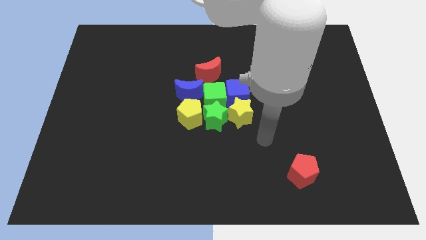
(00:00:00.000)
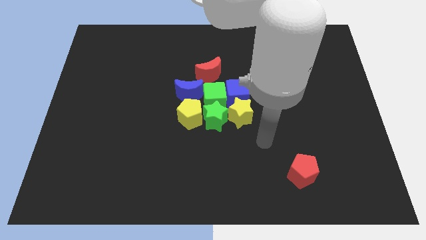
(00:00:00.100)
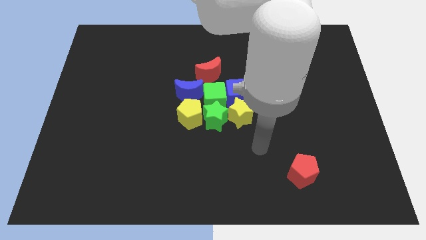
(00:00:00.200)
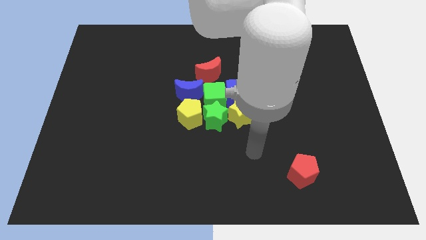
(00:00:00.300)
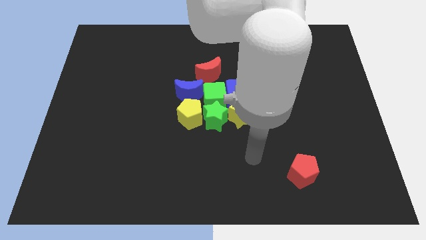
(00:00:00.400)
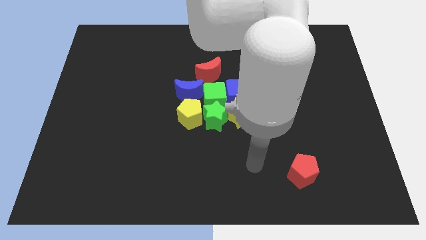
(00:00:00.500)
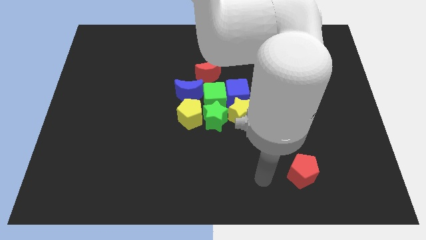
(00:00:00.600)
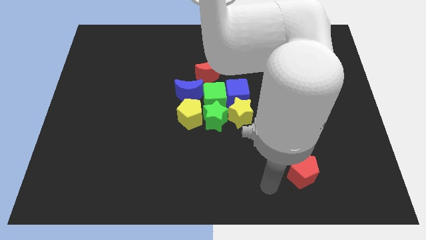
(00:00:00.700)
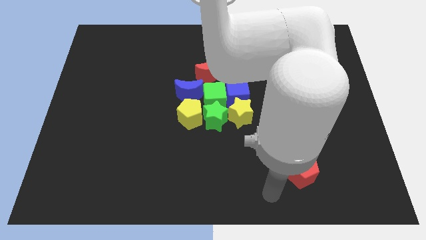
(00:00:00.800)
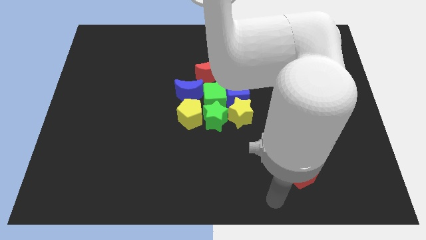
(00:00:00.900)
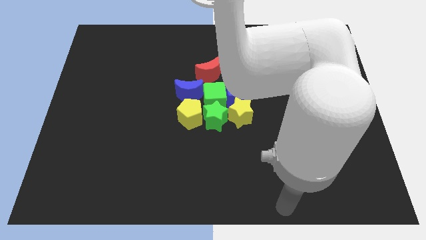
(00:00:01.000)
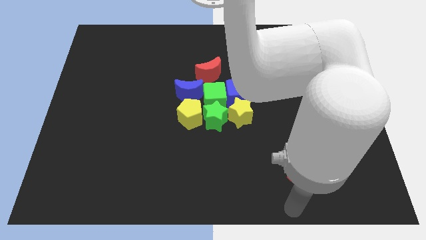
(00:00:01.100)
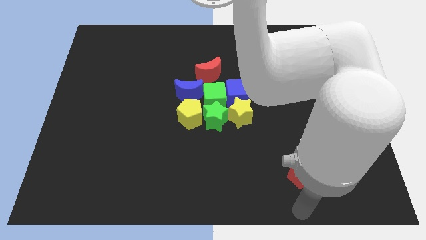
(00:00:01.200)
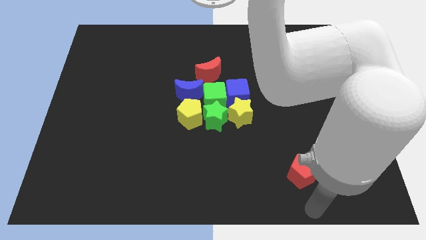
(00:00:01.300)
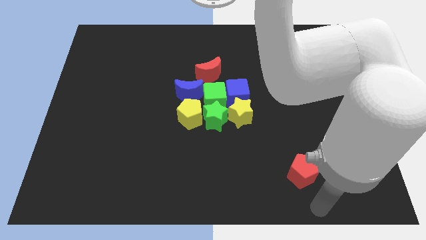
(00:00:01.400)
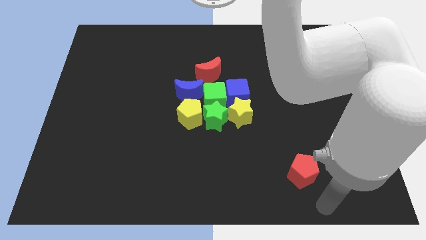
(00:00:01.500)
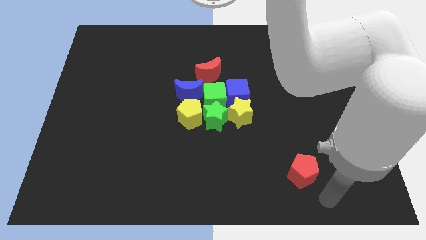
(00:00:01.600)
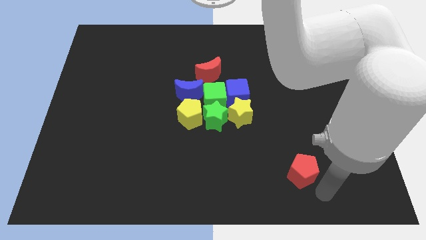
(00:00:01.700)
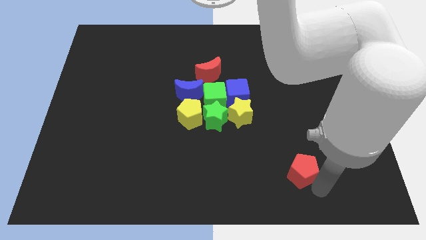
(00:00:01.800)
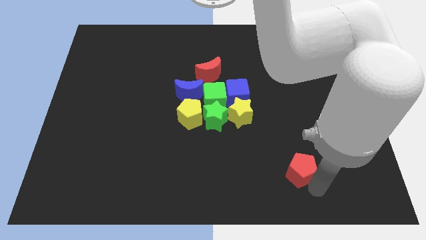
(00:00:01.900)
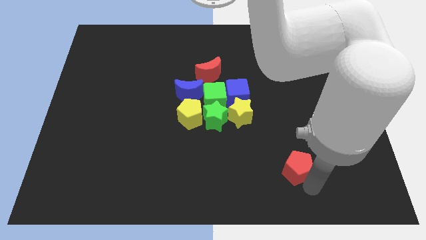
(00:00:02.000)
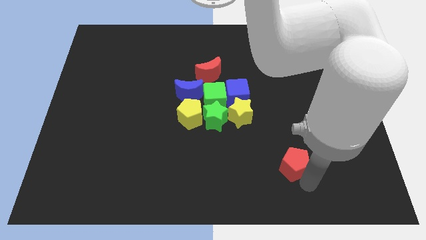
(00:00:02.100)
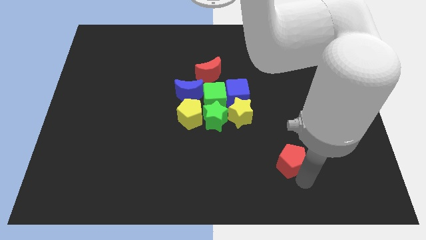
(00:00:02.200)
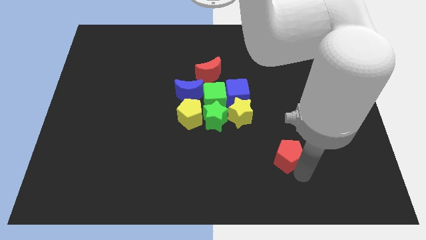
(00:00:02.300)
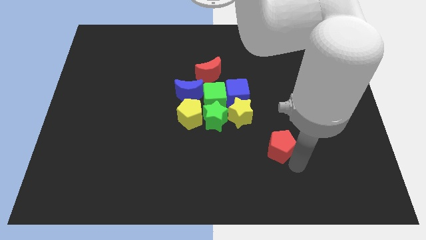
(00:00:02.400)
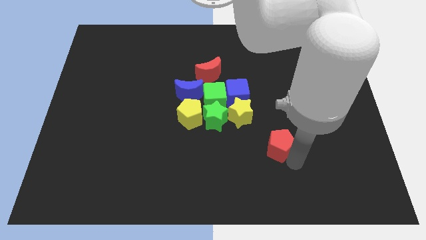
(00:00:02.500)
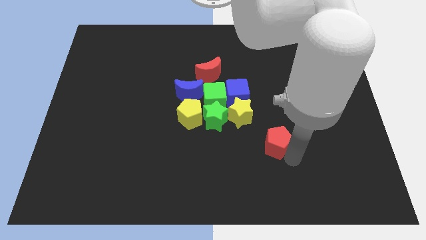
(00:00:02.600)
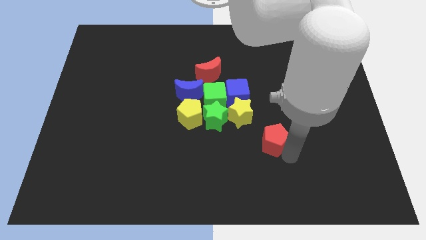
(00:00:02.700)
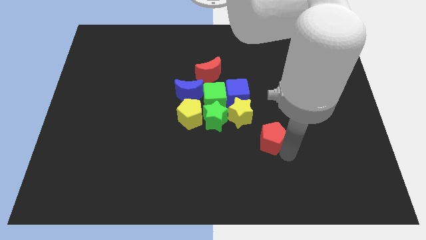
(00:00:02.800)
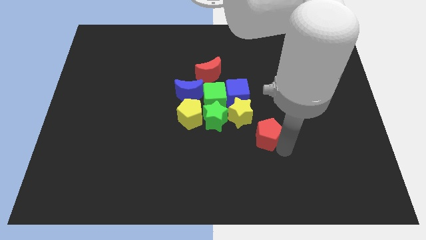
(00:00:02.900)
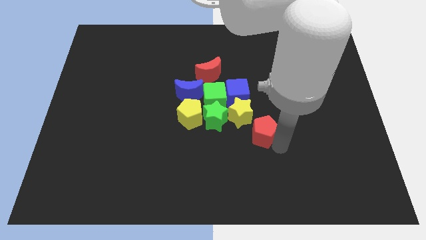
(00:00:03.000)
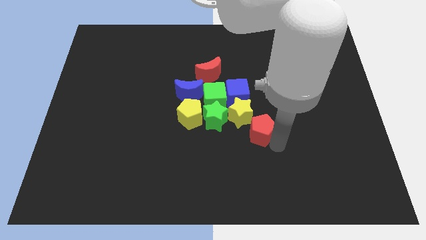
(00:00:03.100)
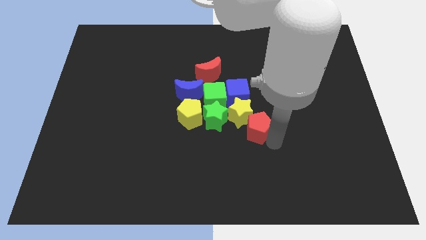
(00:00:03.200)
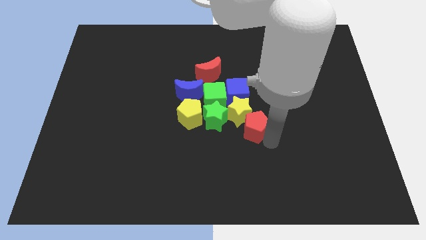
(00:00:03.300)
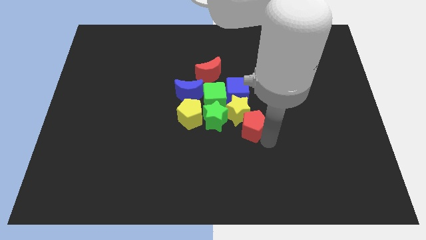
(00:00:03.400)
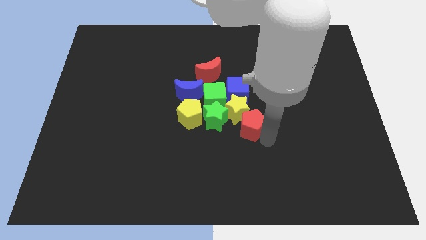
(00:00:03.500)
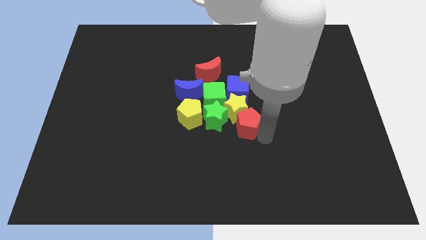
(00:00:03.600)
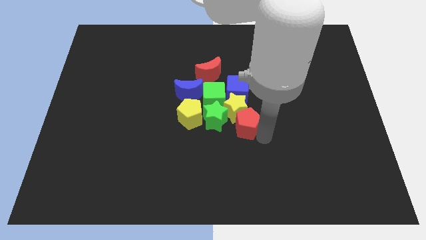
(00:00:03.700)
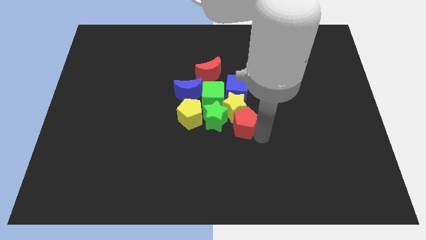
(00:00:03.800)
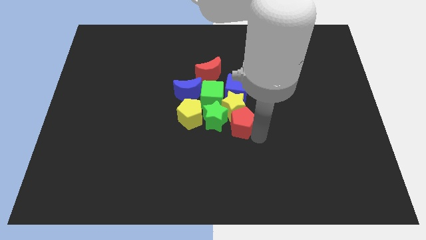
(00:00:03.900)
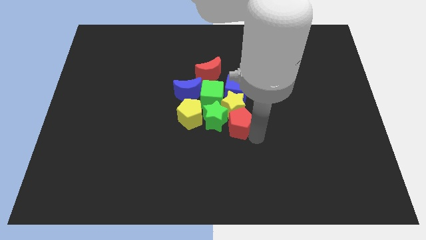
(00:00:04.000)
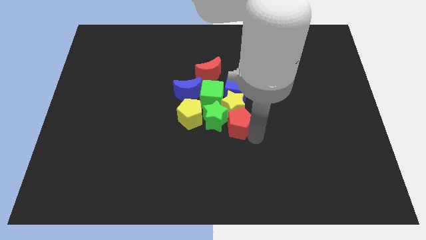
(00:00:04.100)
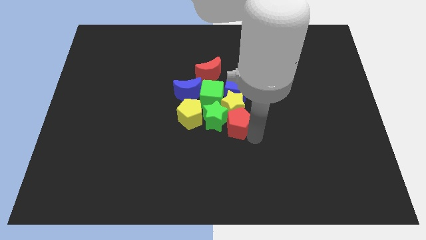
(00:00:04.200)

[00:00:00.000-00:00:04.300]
push the red pentagon to the bottom of the yellow star

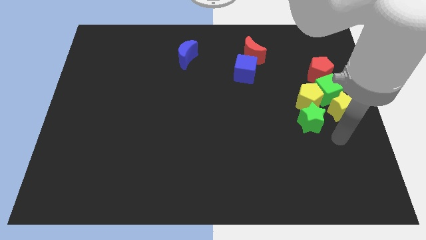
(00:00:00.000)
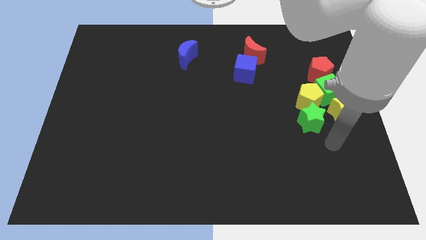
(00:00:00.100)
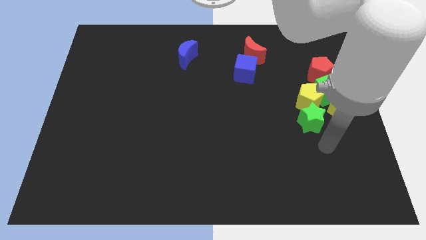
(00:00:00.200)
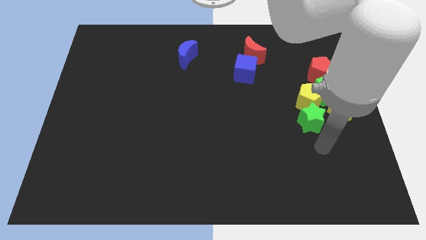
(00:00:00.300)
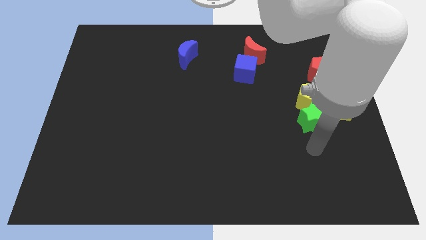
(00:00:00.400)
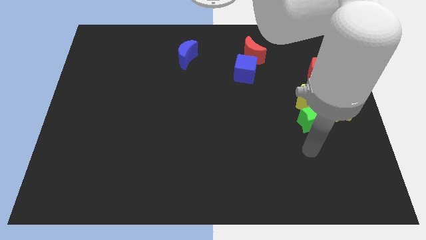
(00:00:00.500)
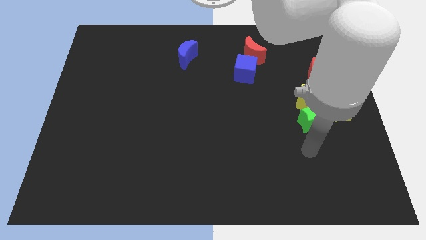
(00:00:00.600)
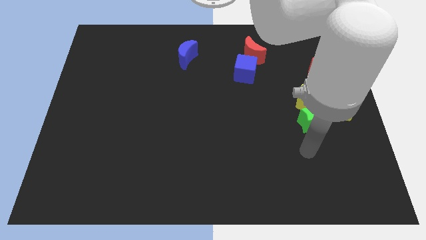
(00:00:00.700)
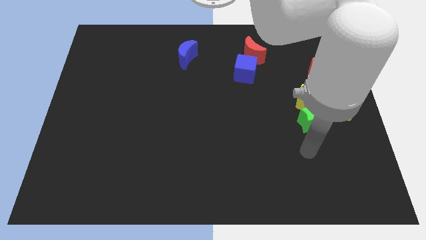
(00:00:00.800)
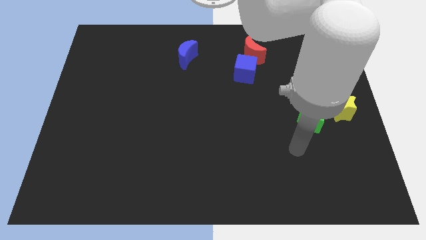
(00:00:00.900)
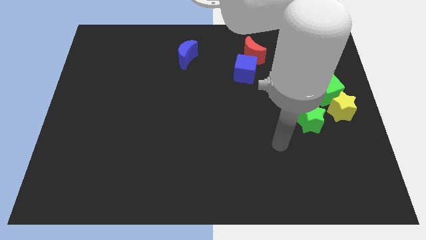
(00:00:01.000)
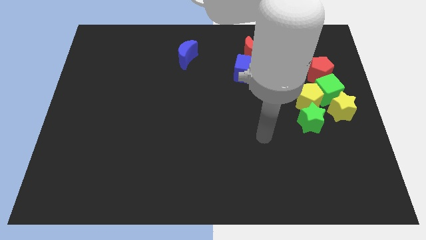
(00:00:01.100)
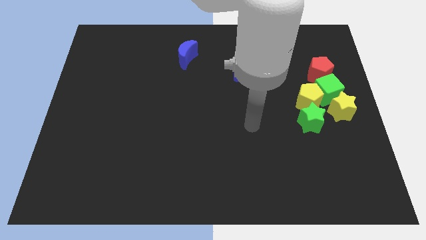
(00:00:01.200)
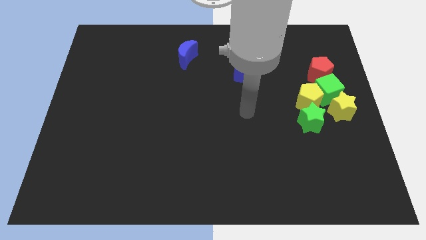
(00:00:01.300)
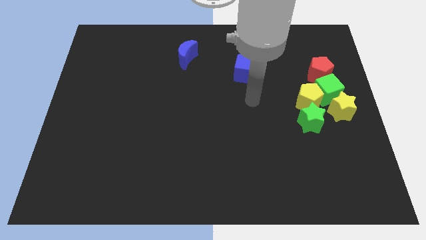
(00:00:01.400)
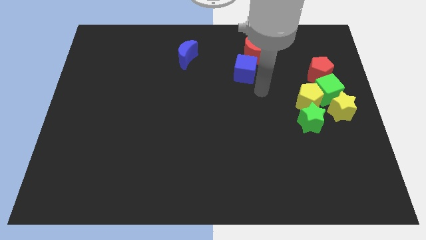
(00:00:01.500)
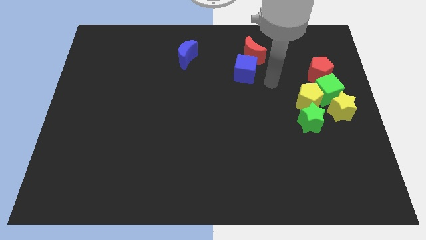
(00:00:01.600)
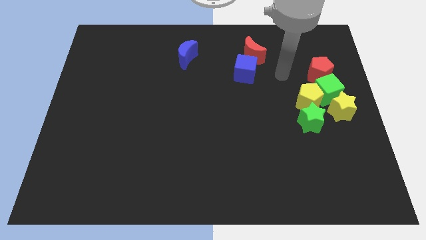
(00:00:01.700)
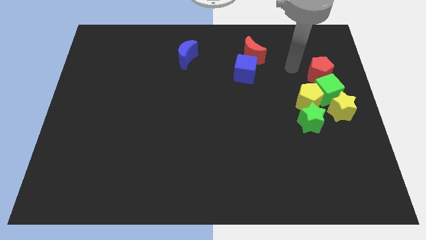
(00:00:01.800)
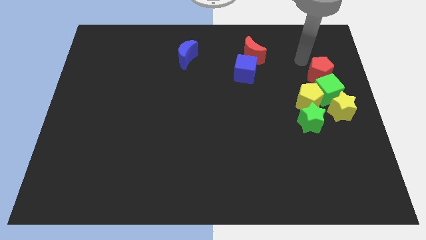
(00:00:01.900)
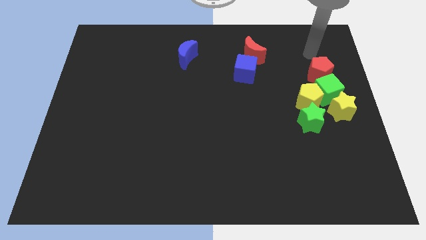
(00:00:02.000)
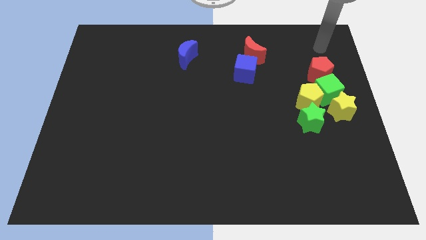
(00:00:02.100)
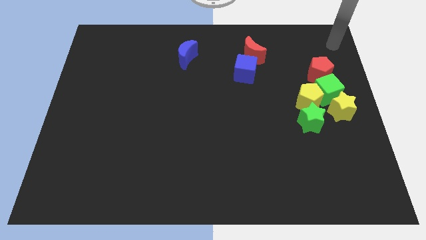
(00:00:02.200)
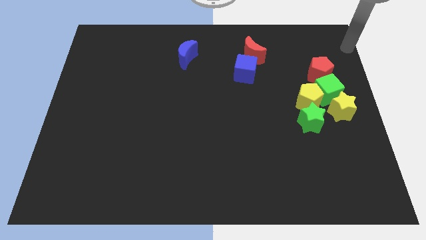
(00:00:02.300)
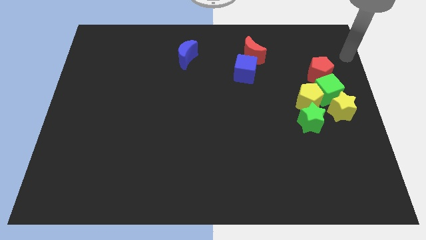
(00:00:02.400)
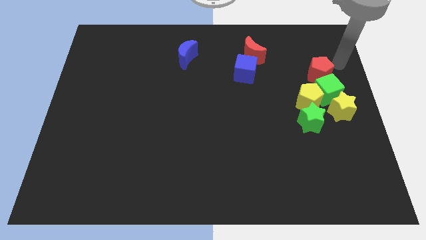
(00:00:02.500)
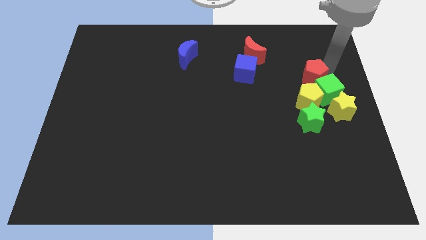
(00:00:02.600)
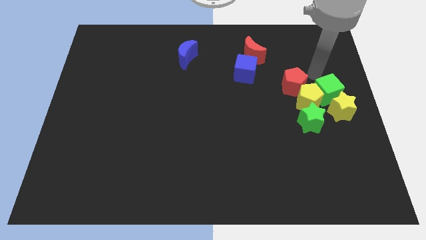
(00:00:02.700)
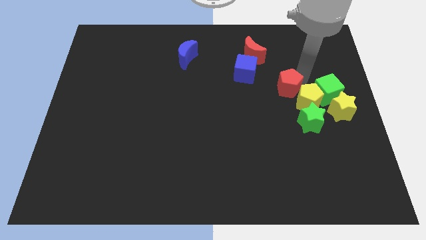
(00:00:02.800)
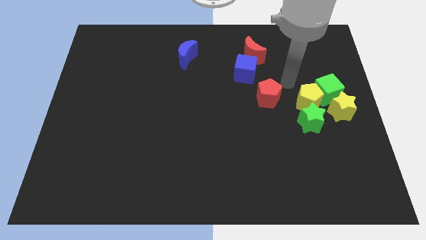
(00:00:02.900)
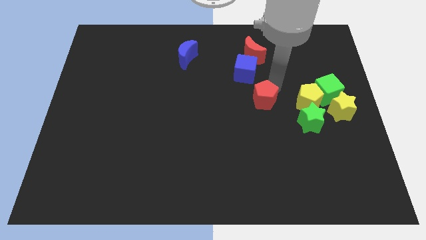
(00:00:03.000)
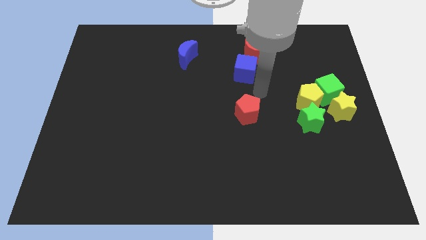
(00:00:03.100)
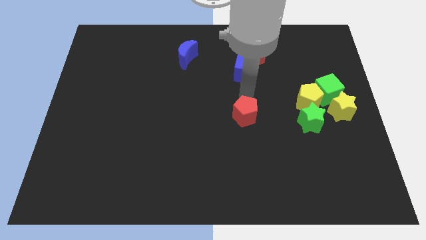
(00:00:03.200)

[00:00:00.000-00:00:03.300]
push the red pentagon towards the bottom side of the board

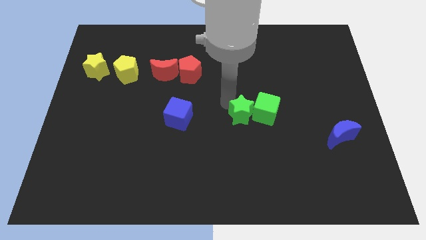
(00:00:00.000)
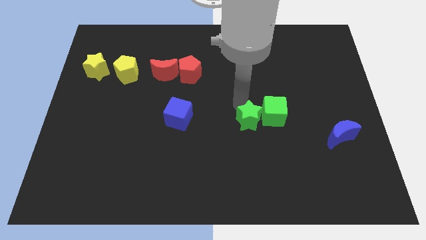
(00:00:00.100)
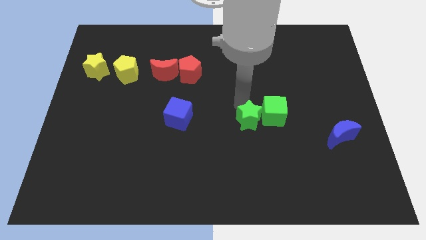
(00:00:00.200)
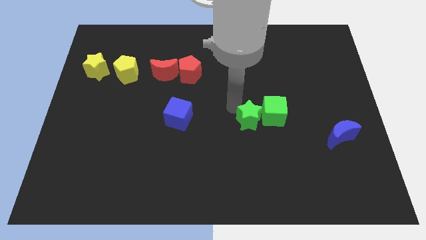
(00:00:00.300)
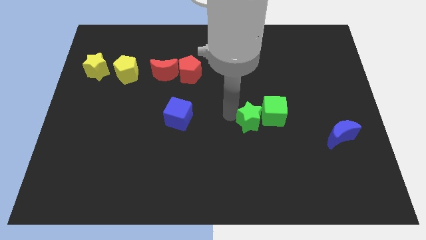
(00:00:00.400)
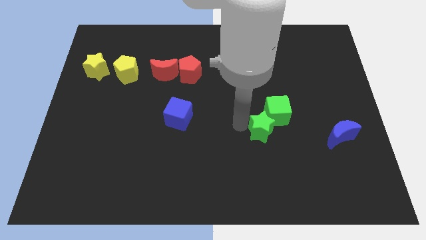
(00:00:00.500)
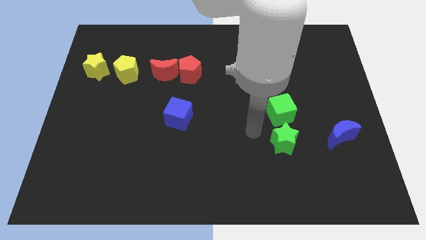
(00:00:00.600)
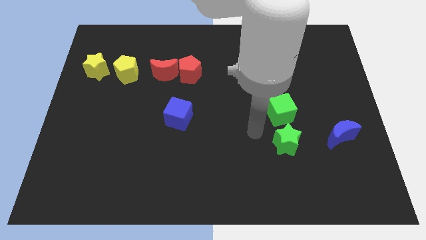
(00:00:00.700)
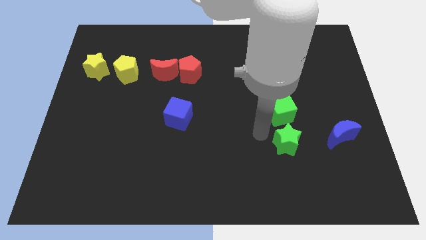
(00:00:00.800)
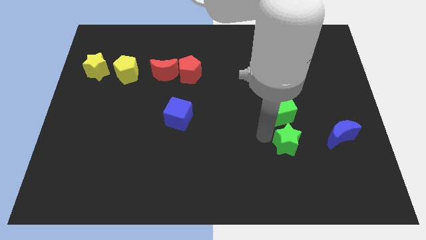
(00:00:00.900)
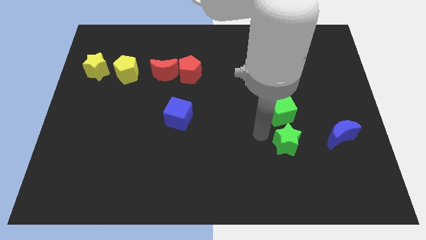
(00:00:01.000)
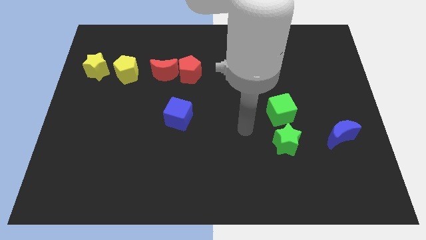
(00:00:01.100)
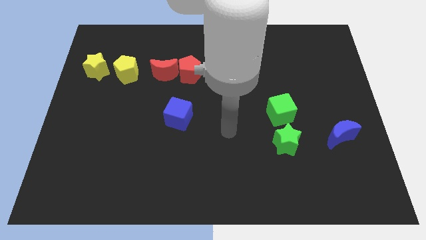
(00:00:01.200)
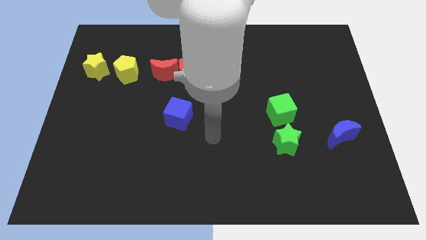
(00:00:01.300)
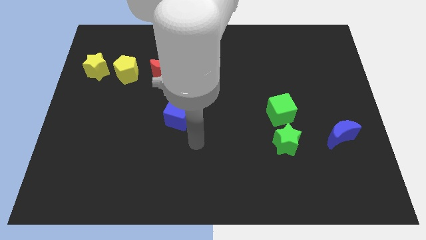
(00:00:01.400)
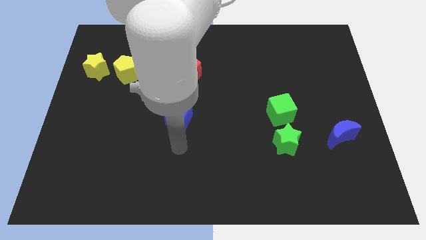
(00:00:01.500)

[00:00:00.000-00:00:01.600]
place the green star below the green cube
